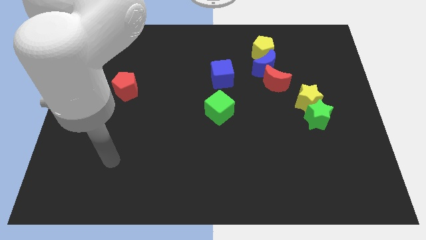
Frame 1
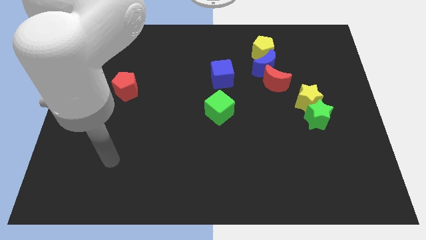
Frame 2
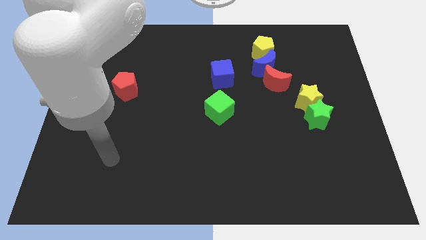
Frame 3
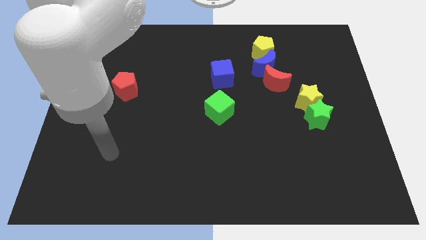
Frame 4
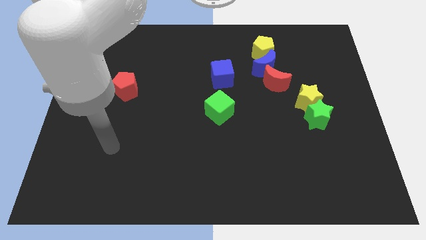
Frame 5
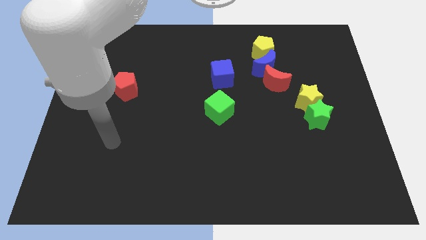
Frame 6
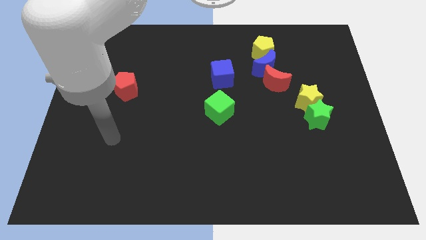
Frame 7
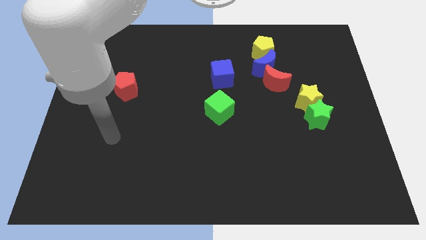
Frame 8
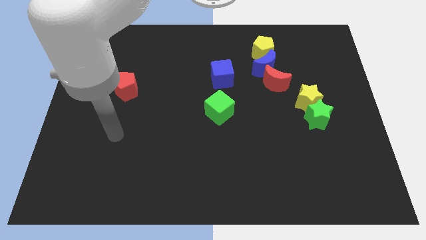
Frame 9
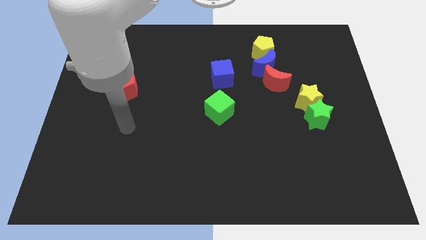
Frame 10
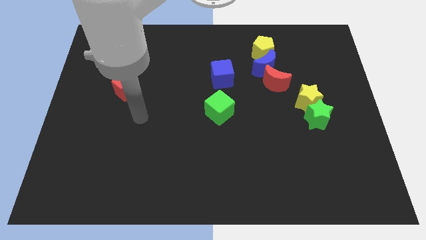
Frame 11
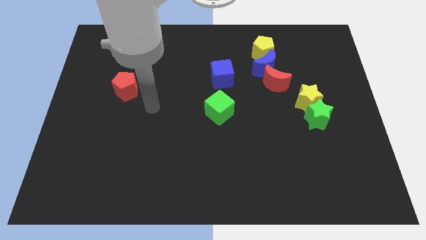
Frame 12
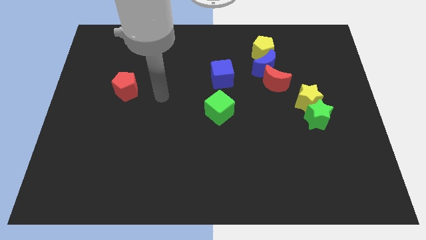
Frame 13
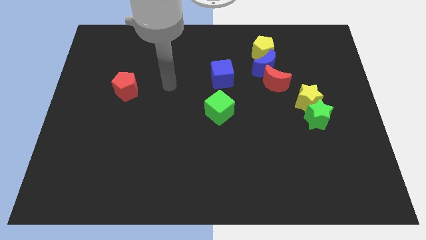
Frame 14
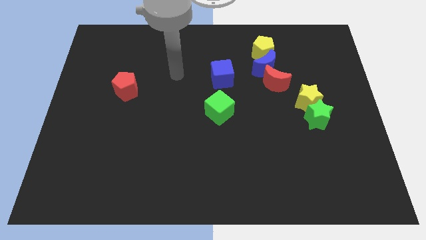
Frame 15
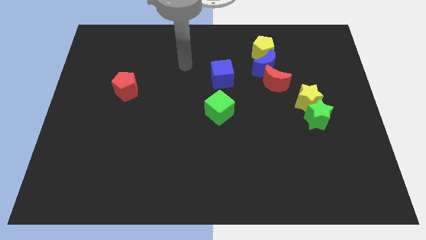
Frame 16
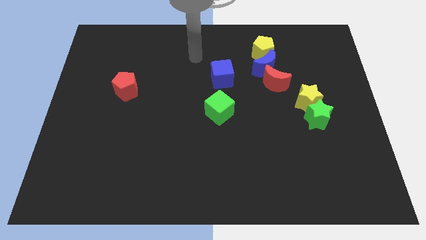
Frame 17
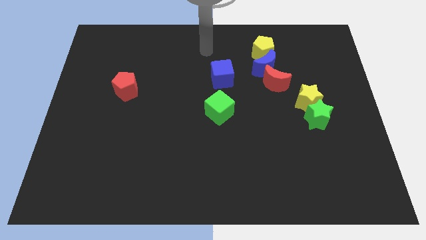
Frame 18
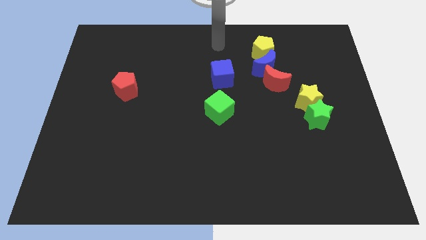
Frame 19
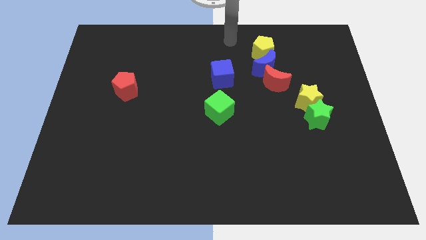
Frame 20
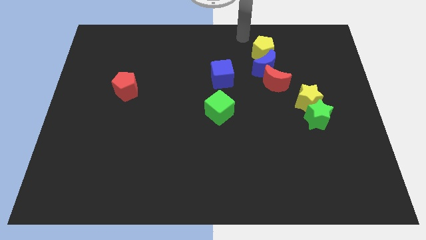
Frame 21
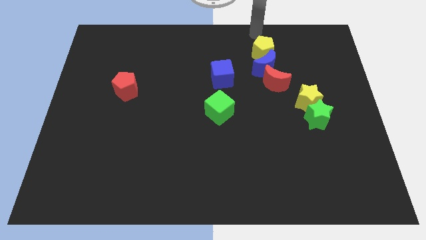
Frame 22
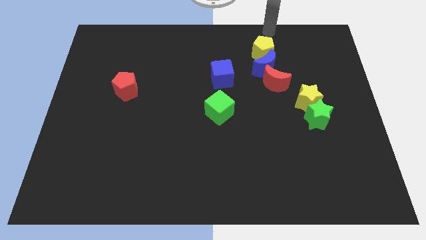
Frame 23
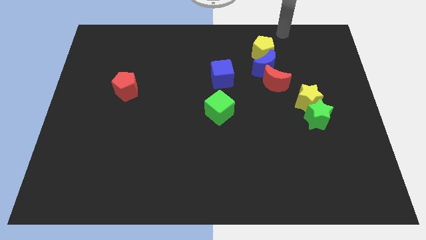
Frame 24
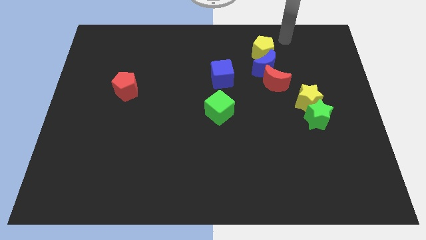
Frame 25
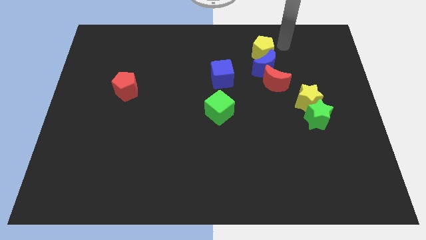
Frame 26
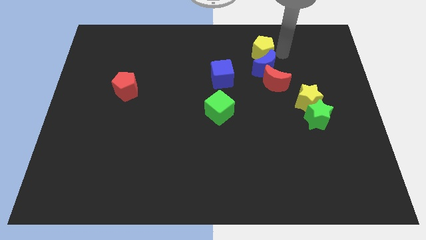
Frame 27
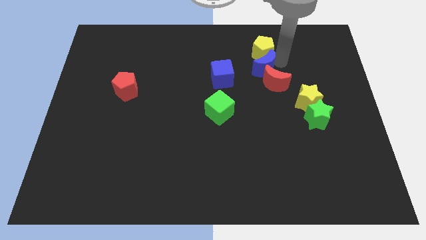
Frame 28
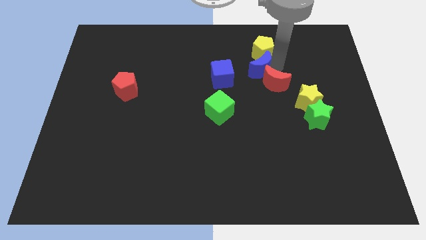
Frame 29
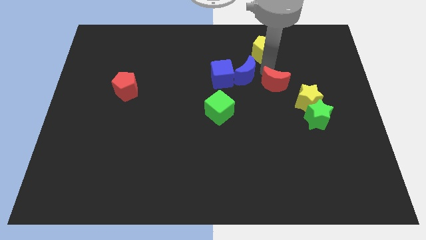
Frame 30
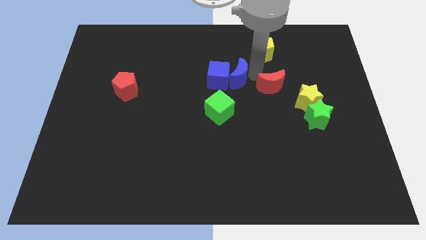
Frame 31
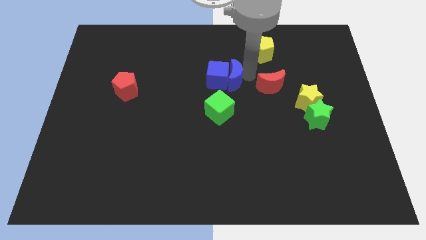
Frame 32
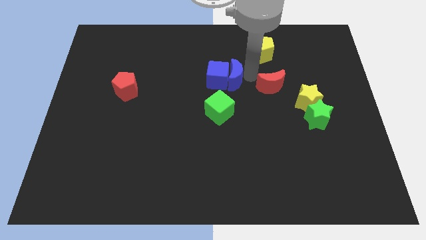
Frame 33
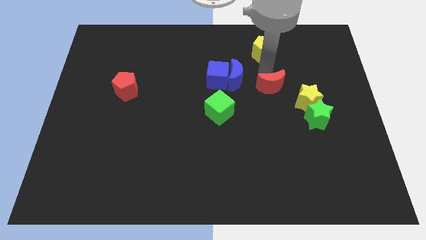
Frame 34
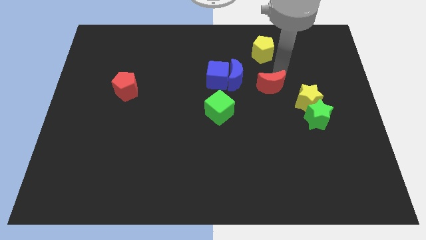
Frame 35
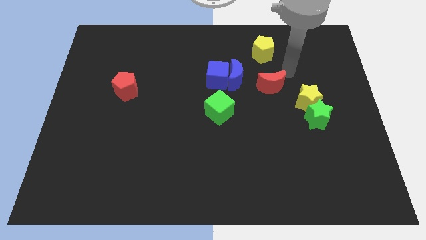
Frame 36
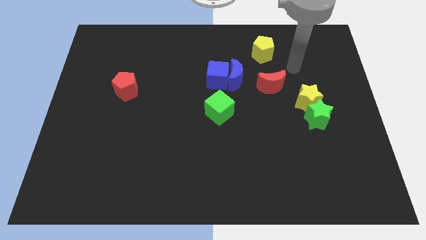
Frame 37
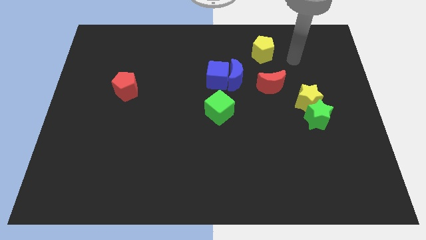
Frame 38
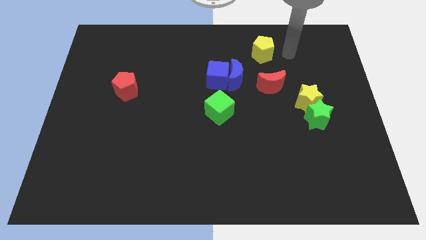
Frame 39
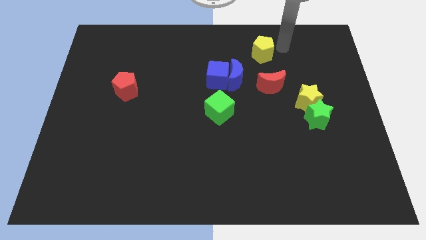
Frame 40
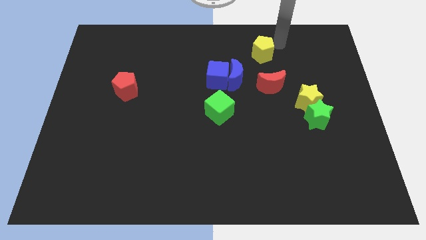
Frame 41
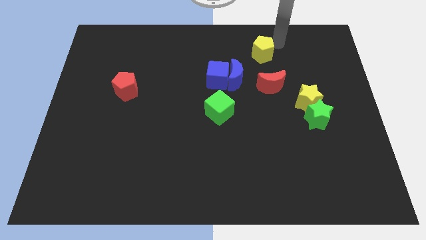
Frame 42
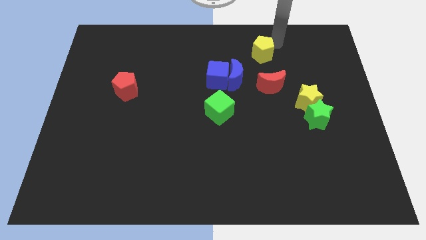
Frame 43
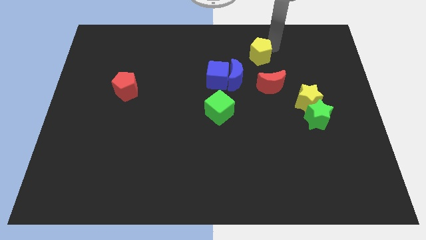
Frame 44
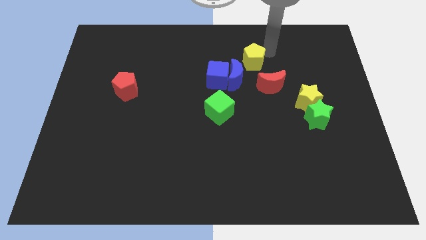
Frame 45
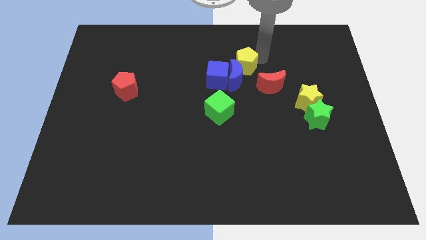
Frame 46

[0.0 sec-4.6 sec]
move blue crescent into blue block

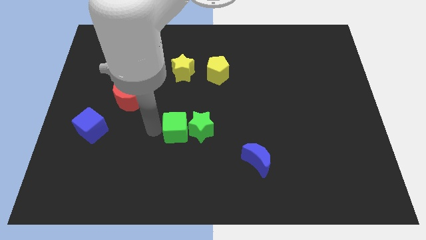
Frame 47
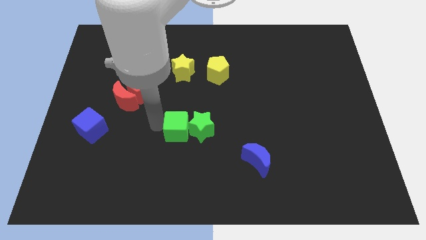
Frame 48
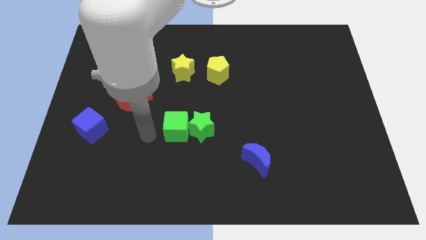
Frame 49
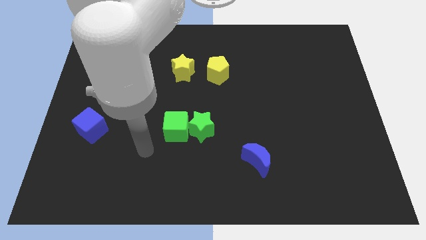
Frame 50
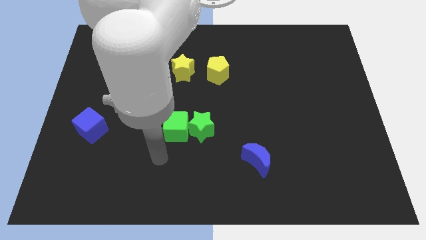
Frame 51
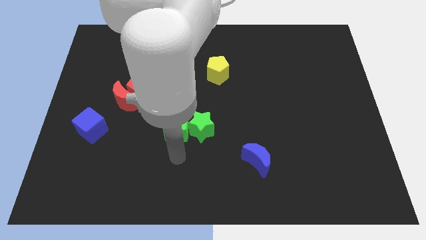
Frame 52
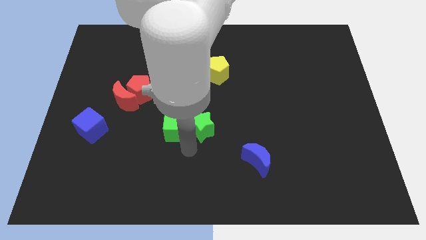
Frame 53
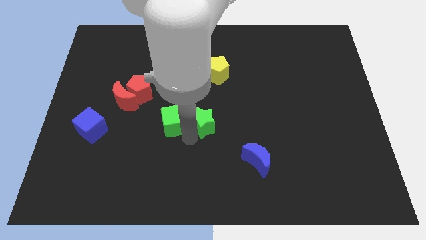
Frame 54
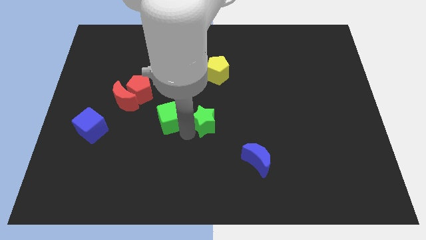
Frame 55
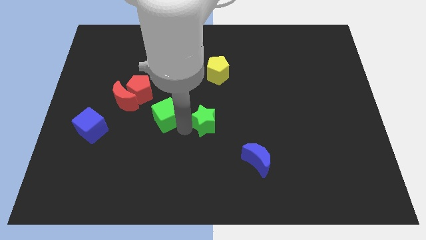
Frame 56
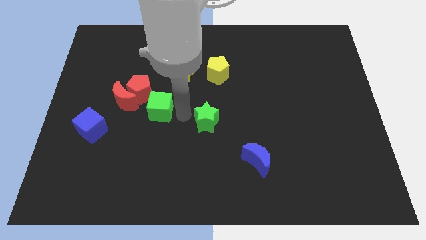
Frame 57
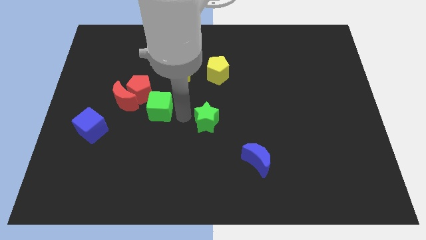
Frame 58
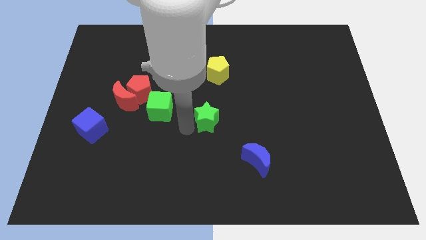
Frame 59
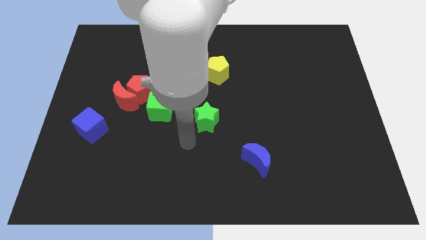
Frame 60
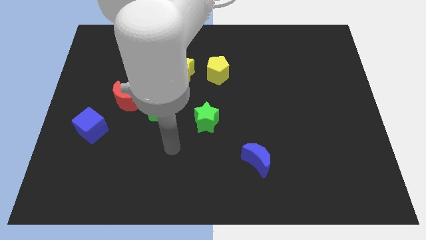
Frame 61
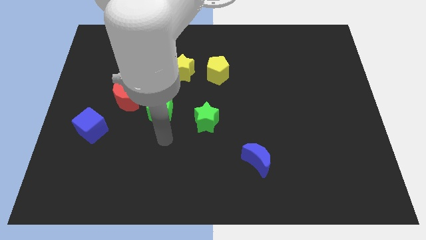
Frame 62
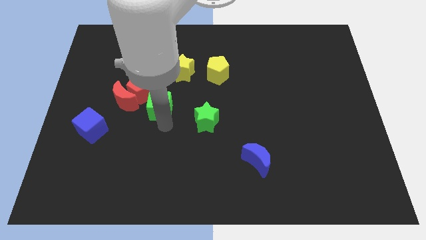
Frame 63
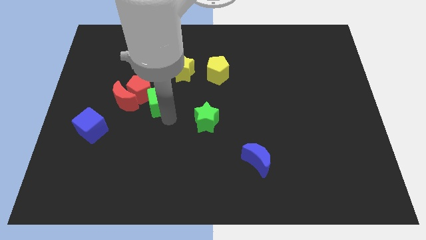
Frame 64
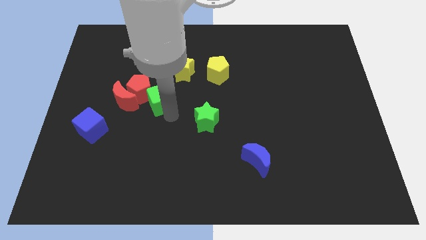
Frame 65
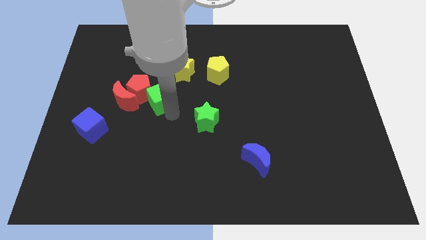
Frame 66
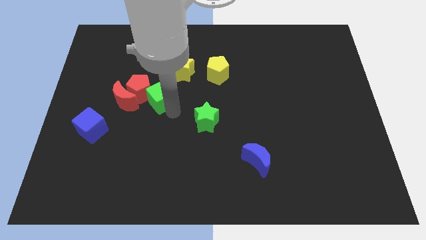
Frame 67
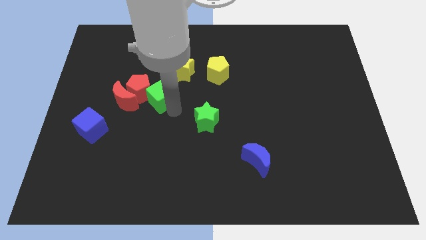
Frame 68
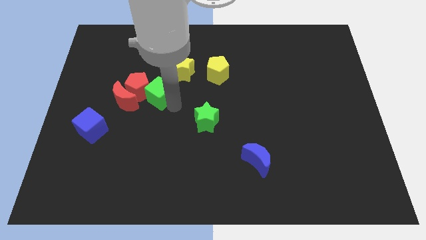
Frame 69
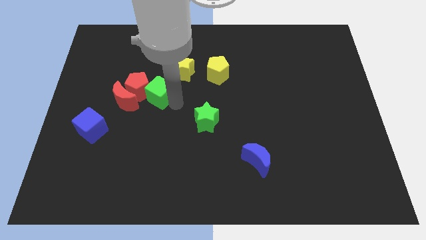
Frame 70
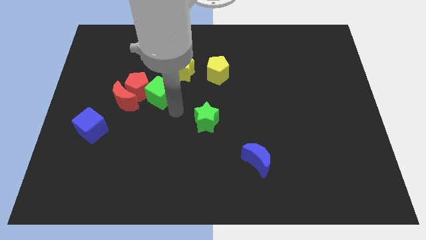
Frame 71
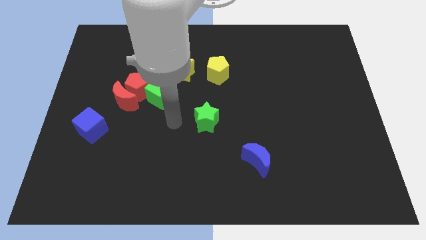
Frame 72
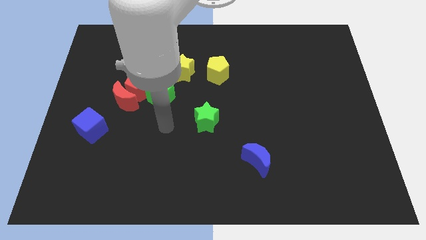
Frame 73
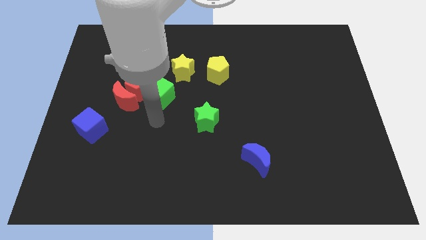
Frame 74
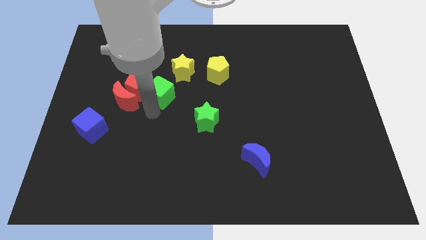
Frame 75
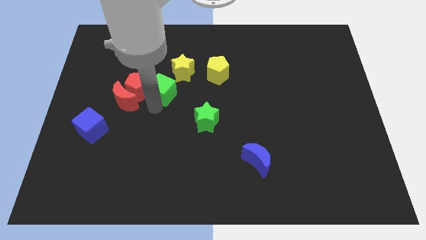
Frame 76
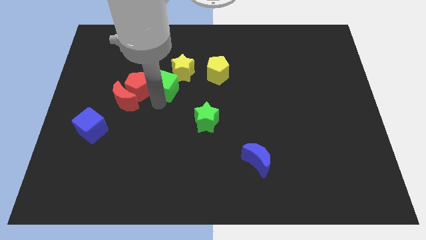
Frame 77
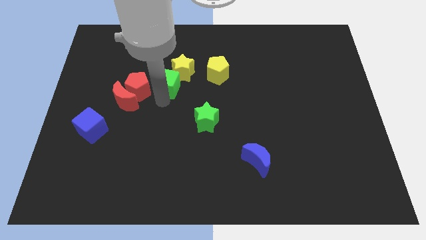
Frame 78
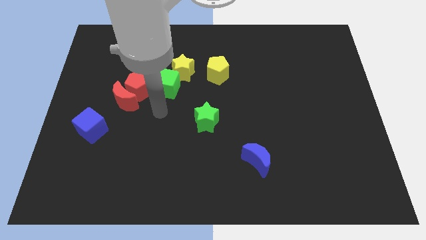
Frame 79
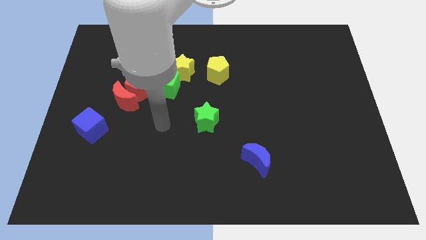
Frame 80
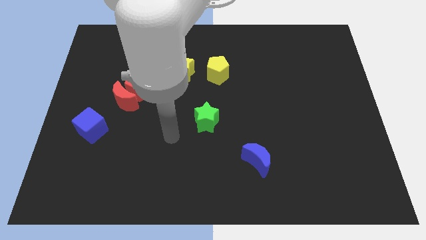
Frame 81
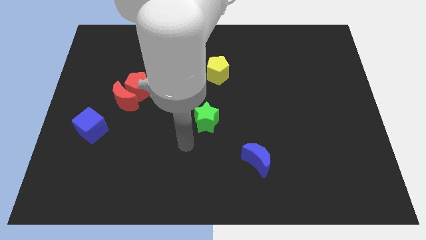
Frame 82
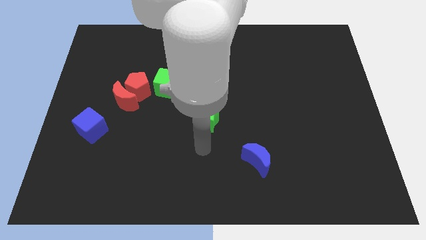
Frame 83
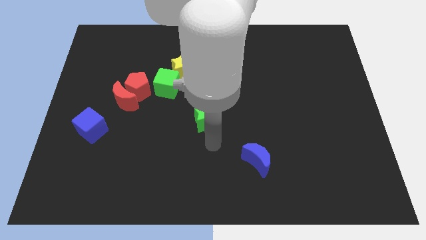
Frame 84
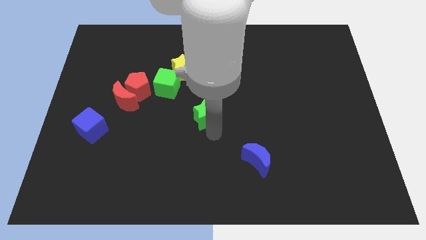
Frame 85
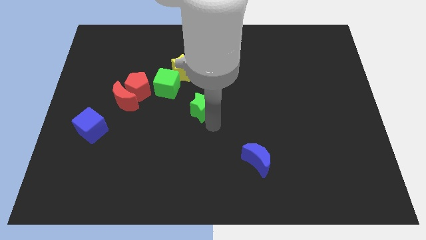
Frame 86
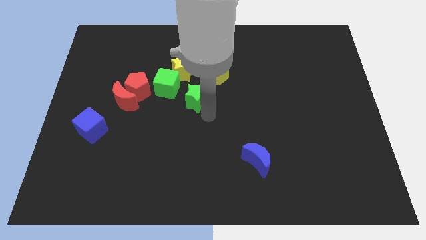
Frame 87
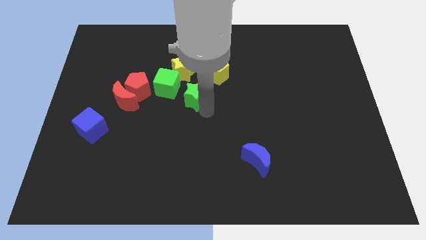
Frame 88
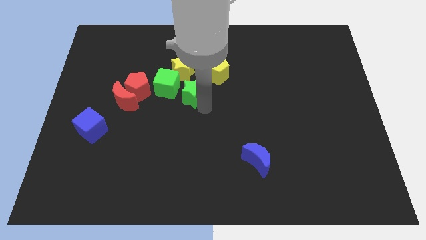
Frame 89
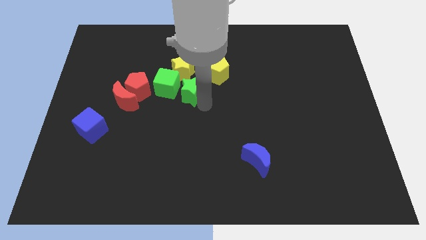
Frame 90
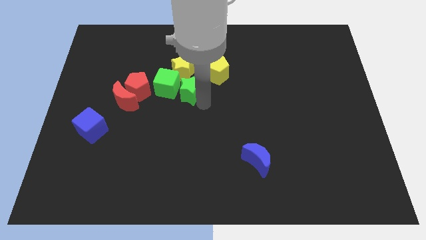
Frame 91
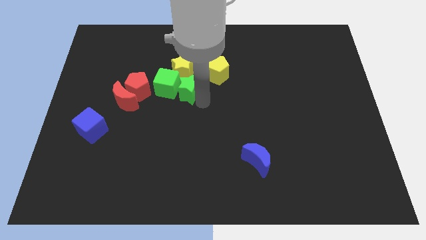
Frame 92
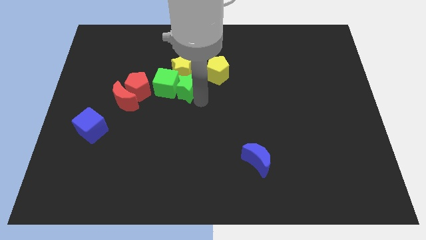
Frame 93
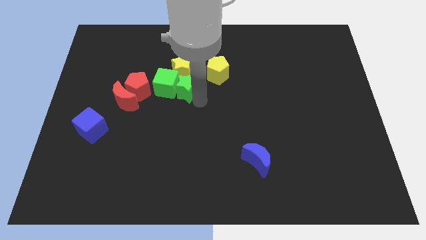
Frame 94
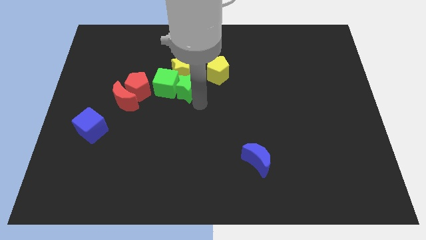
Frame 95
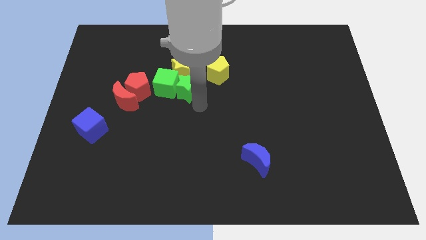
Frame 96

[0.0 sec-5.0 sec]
move the green blocks to the bottom side of the yellow star
